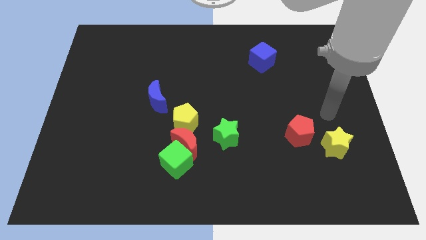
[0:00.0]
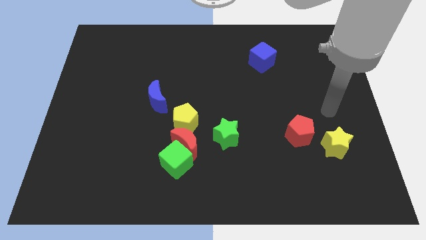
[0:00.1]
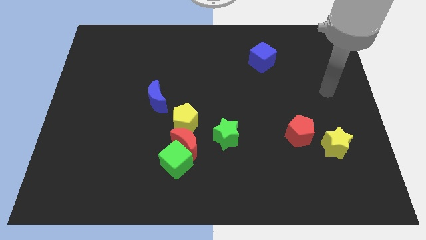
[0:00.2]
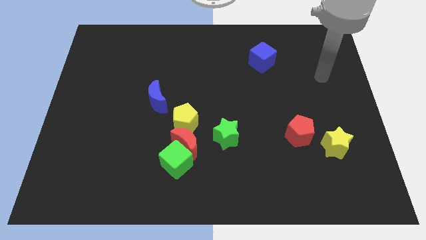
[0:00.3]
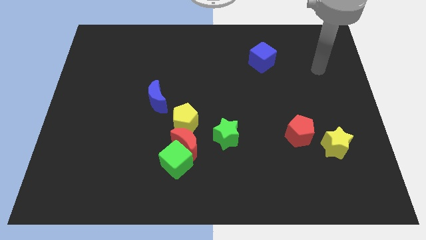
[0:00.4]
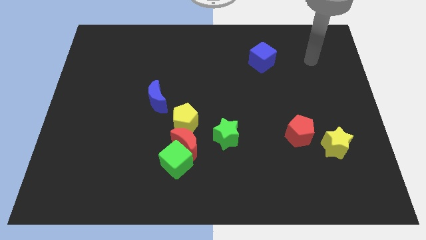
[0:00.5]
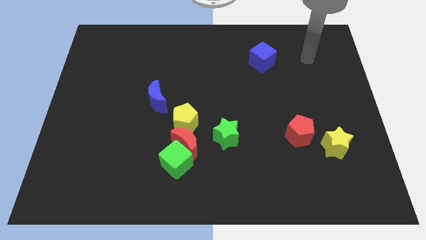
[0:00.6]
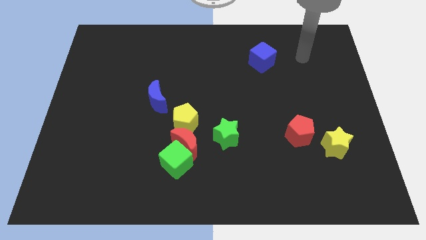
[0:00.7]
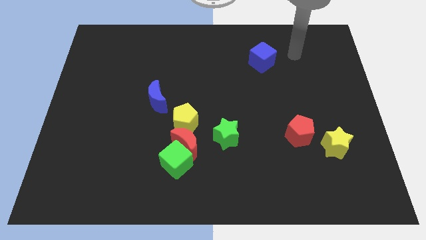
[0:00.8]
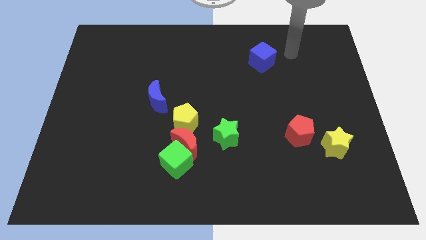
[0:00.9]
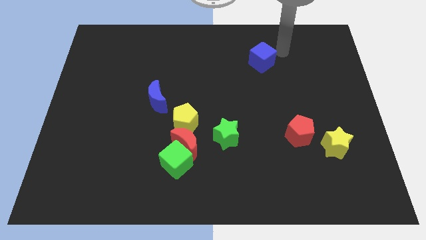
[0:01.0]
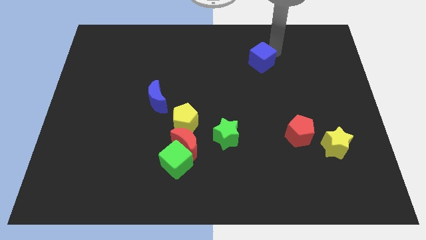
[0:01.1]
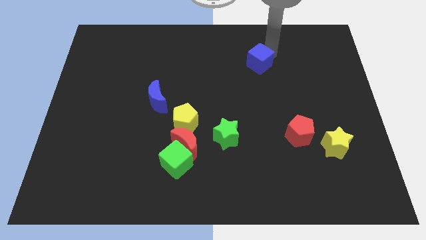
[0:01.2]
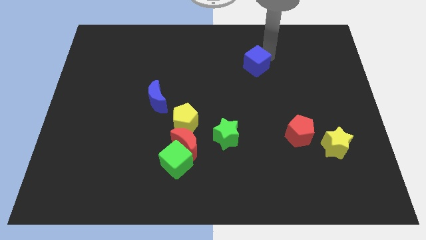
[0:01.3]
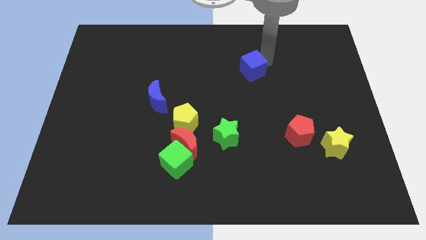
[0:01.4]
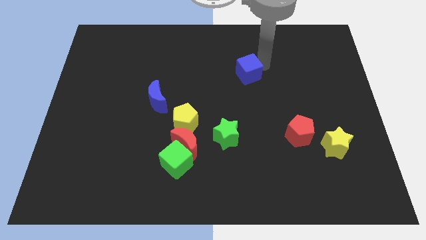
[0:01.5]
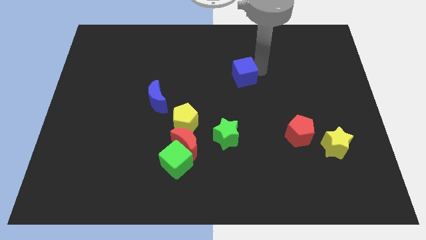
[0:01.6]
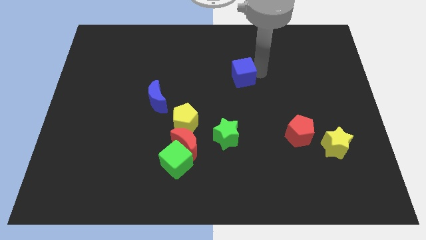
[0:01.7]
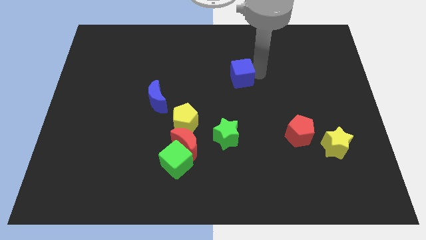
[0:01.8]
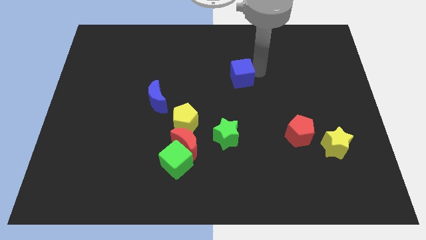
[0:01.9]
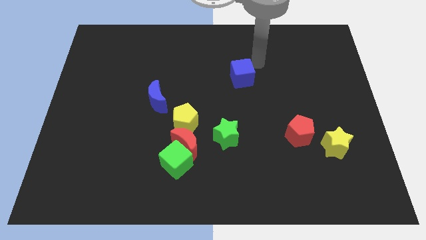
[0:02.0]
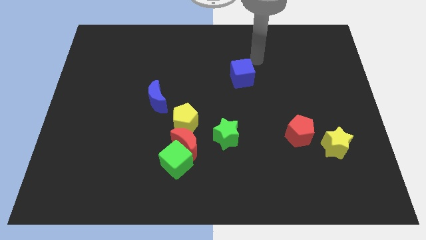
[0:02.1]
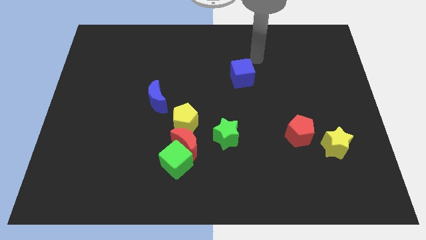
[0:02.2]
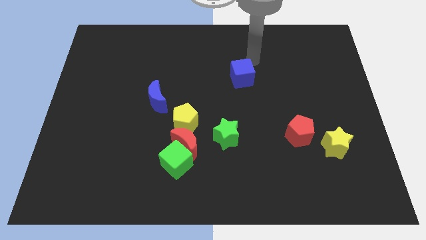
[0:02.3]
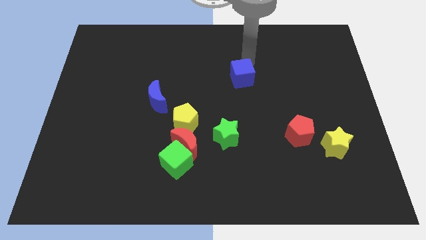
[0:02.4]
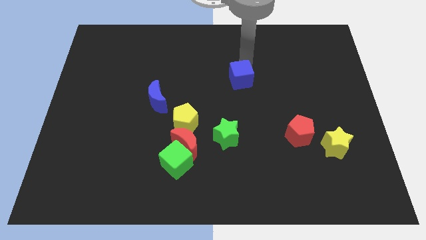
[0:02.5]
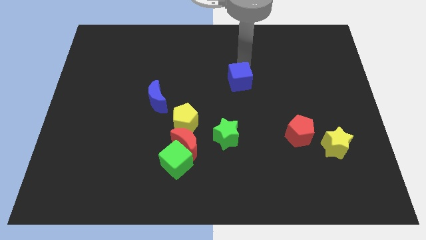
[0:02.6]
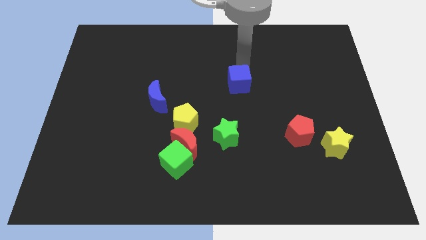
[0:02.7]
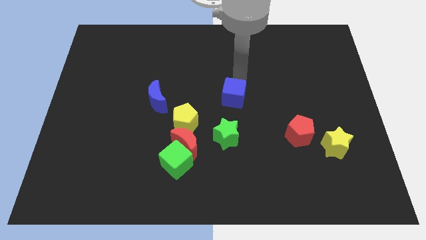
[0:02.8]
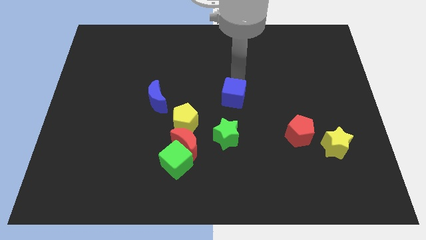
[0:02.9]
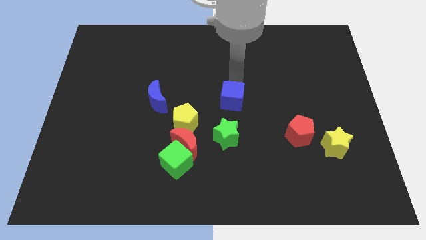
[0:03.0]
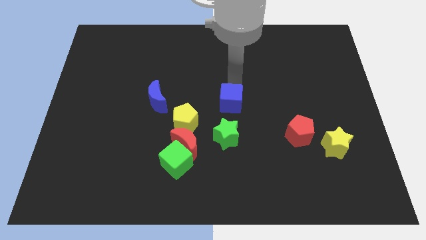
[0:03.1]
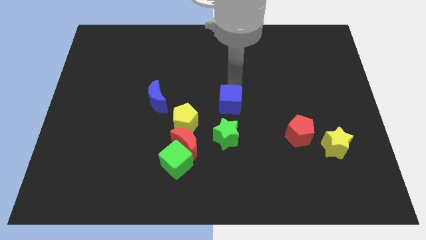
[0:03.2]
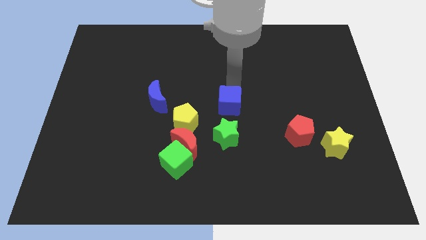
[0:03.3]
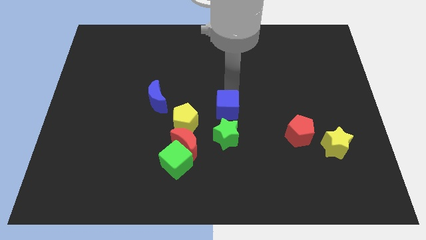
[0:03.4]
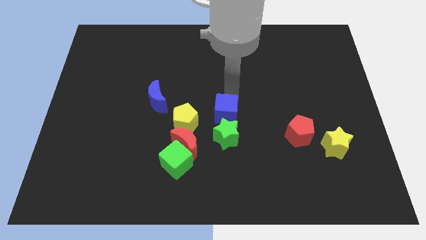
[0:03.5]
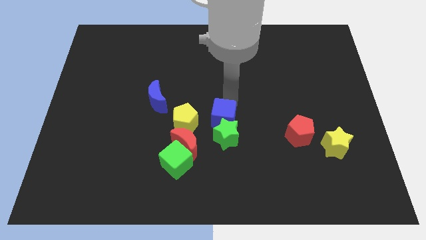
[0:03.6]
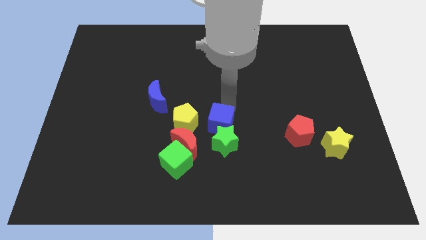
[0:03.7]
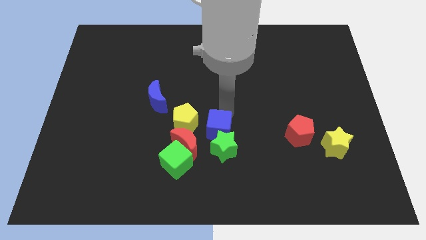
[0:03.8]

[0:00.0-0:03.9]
move the blue cube next to the green star

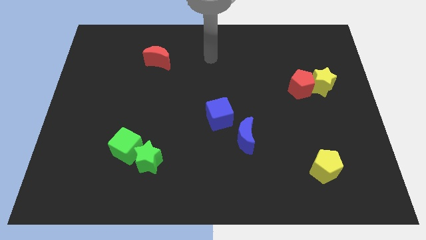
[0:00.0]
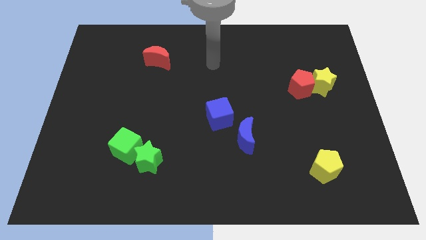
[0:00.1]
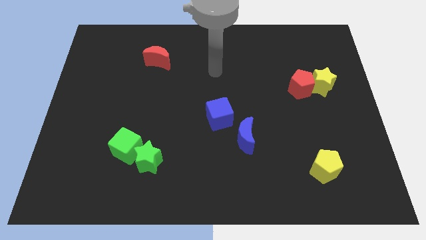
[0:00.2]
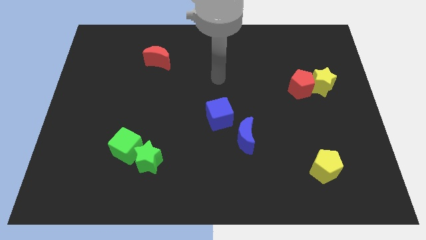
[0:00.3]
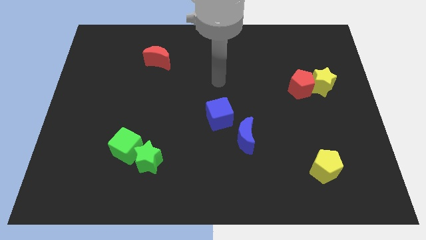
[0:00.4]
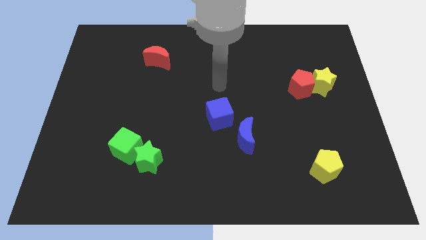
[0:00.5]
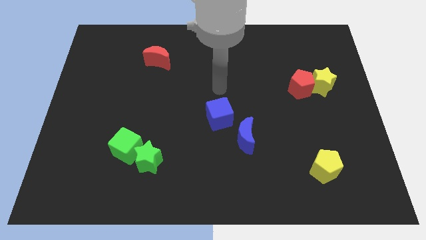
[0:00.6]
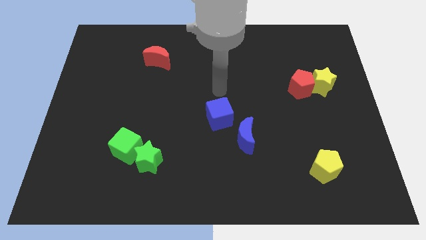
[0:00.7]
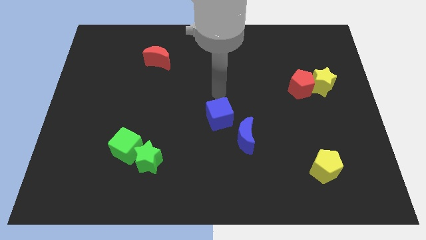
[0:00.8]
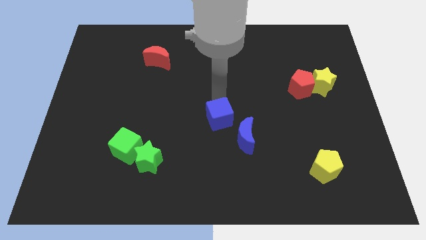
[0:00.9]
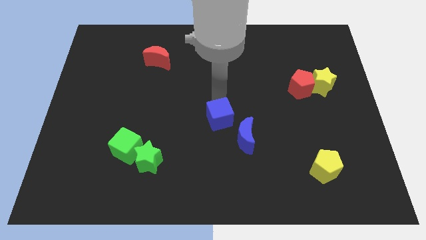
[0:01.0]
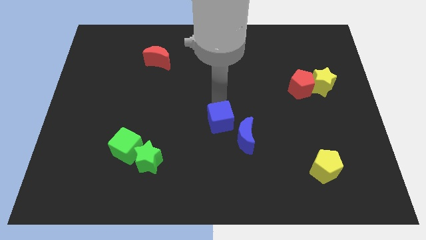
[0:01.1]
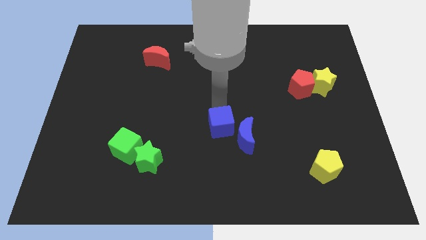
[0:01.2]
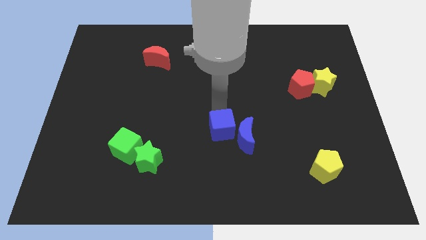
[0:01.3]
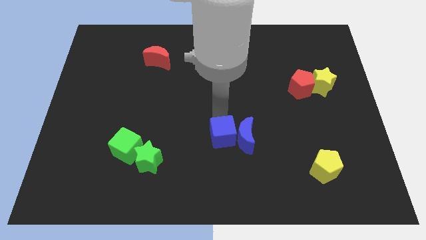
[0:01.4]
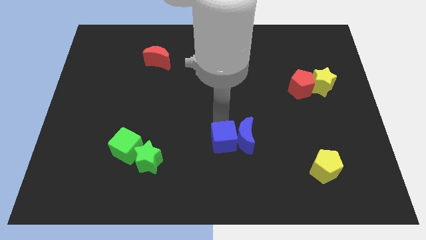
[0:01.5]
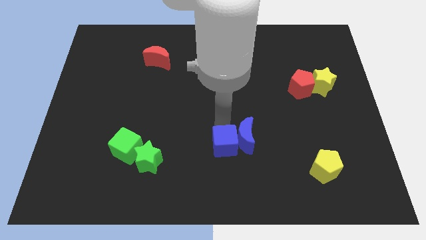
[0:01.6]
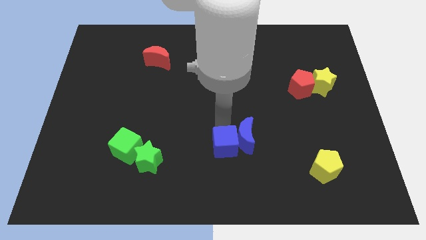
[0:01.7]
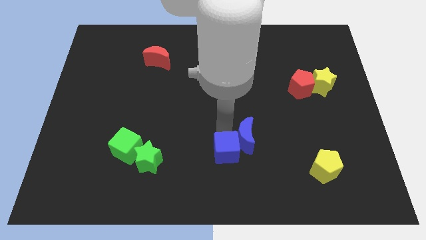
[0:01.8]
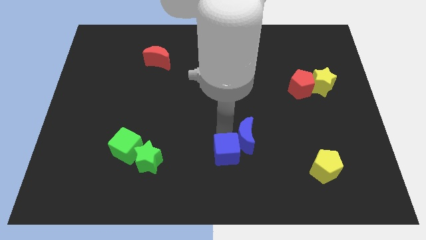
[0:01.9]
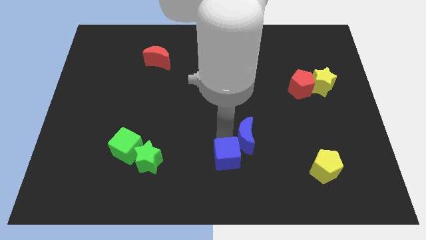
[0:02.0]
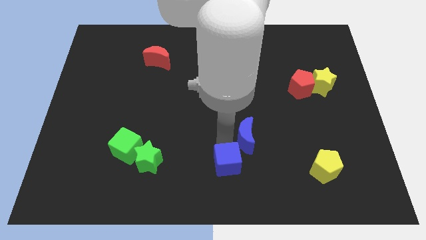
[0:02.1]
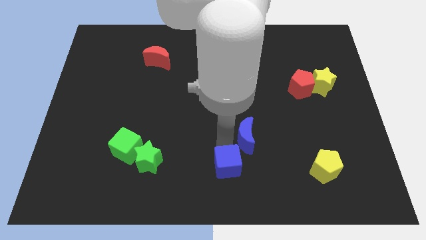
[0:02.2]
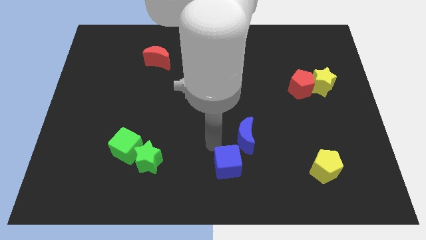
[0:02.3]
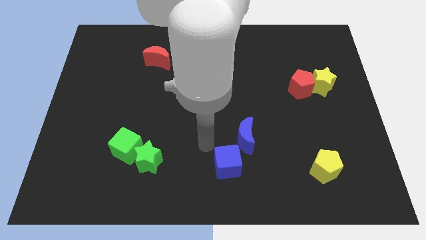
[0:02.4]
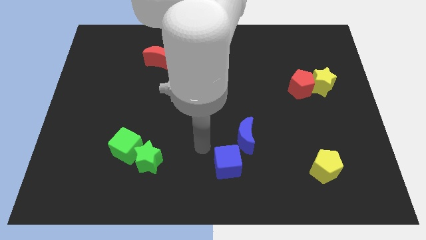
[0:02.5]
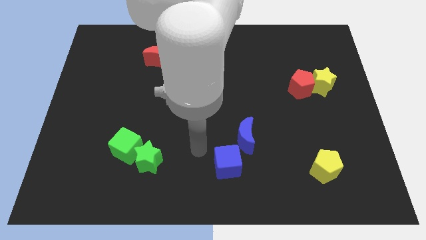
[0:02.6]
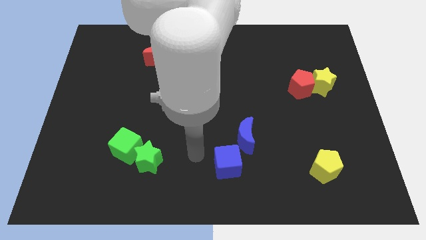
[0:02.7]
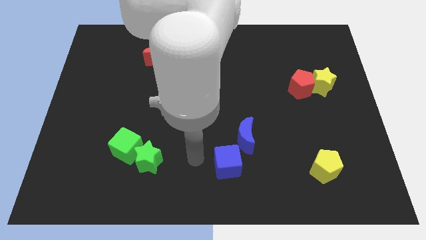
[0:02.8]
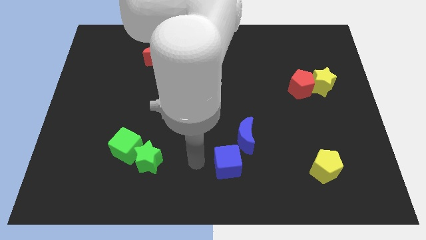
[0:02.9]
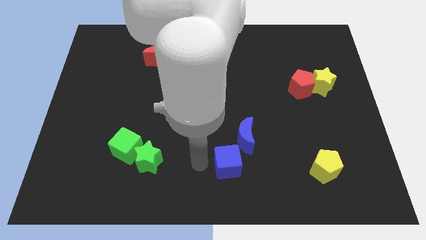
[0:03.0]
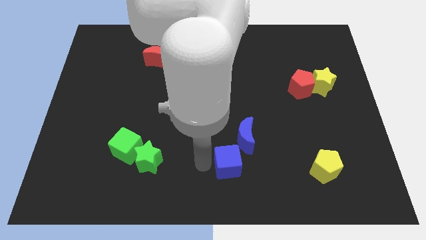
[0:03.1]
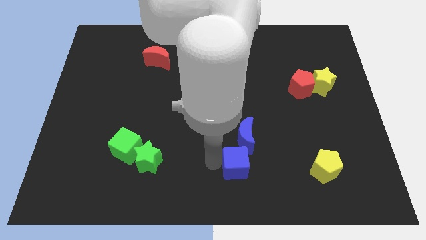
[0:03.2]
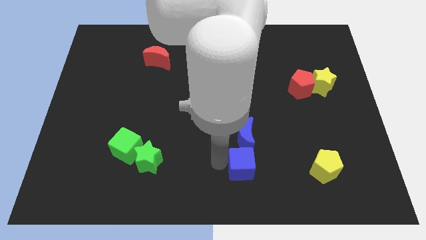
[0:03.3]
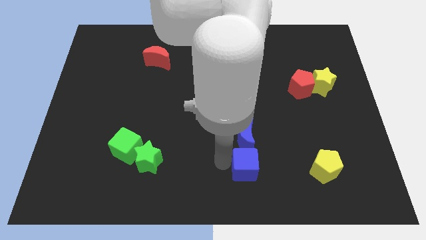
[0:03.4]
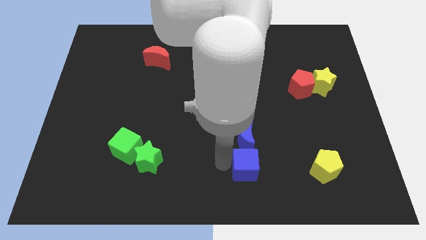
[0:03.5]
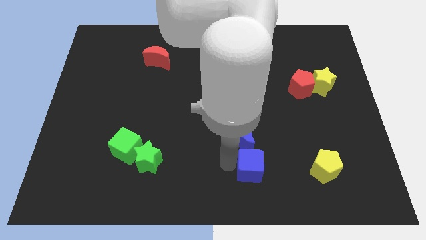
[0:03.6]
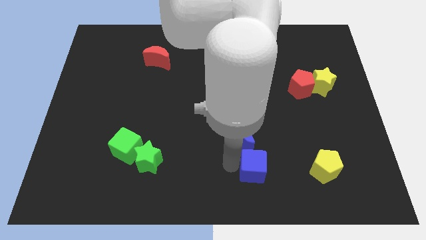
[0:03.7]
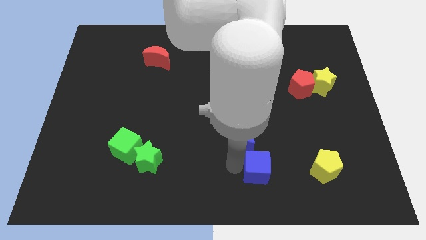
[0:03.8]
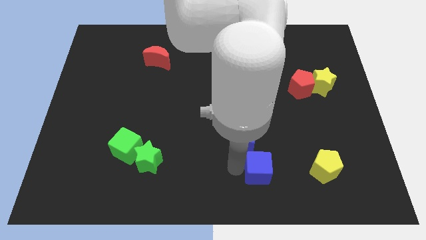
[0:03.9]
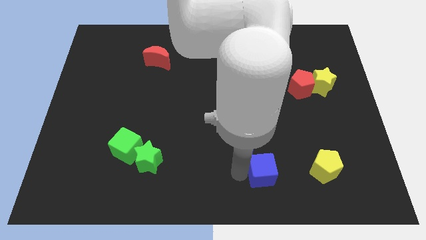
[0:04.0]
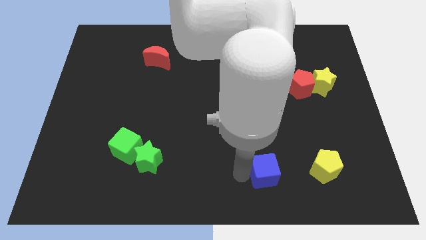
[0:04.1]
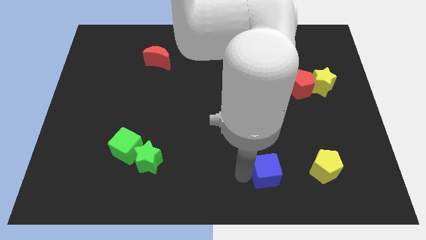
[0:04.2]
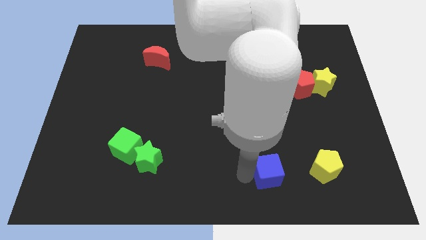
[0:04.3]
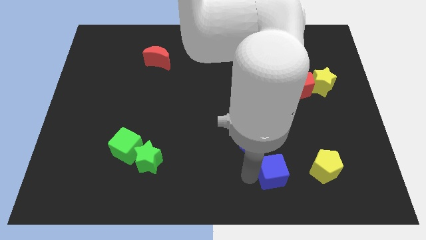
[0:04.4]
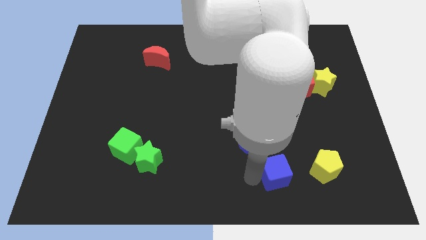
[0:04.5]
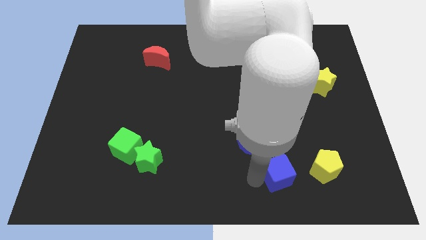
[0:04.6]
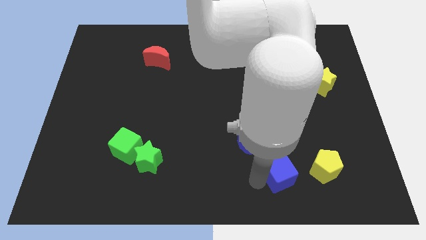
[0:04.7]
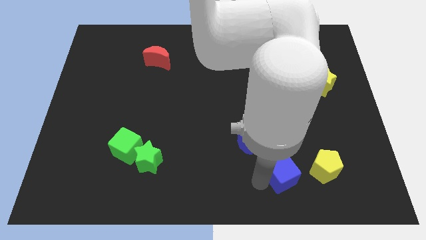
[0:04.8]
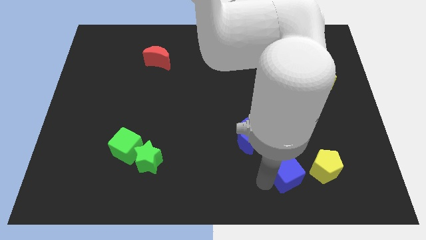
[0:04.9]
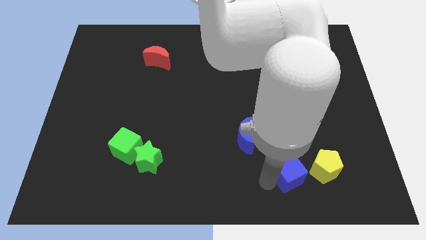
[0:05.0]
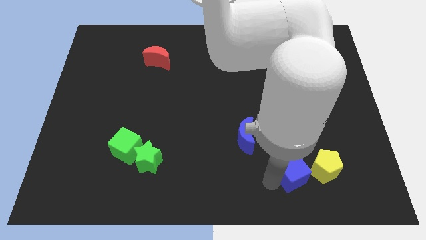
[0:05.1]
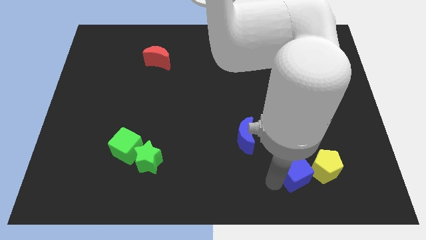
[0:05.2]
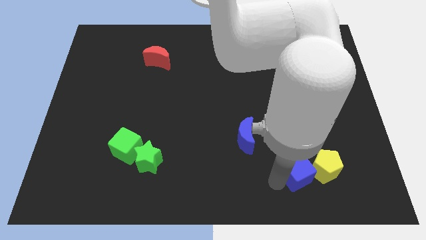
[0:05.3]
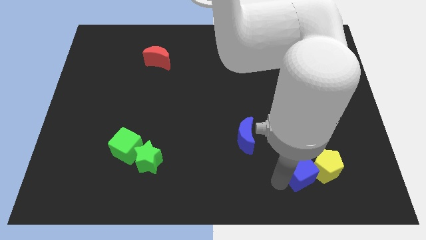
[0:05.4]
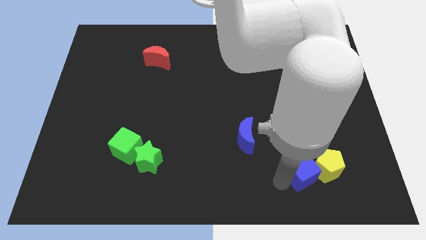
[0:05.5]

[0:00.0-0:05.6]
put the blue cube to the yellow pentagon
